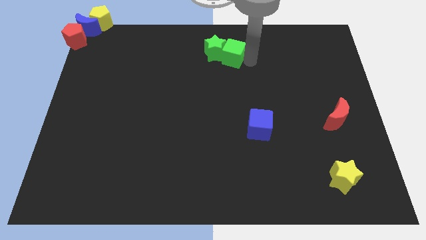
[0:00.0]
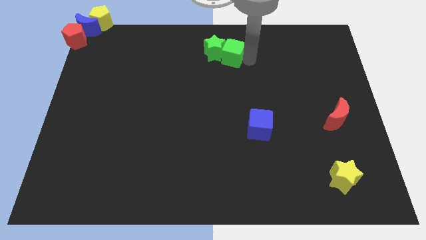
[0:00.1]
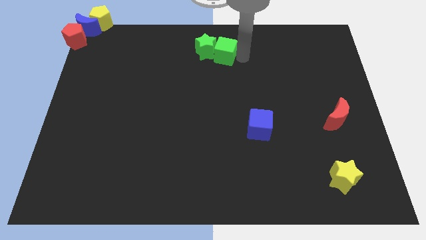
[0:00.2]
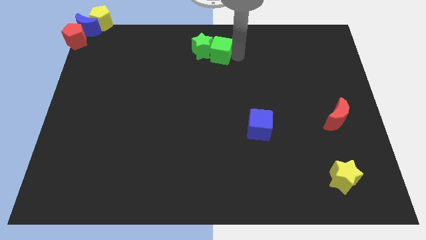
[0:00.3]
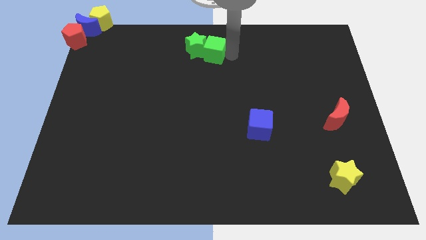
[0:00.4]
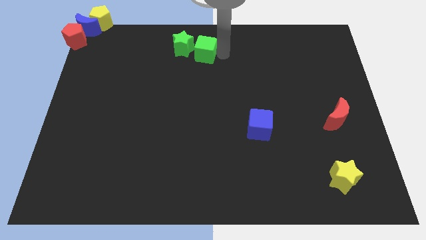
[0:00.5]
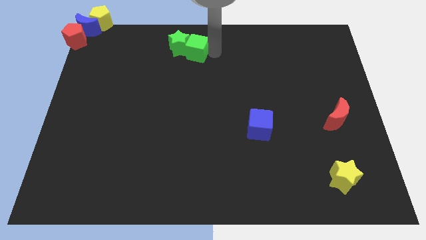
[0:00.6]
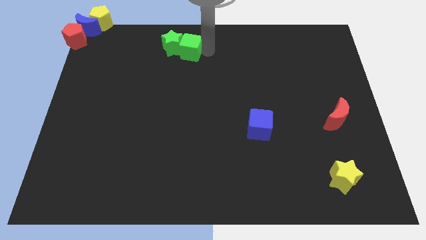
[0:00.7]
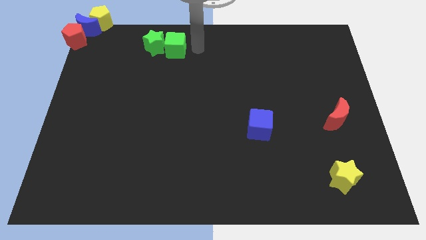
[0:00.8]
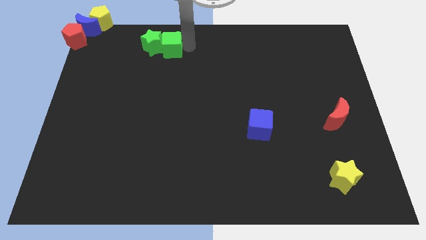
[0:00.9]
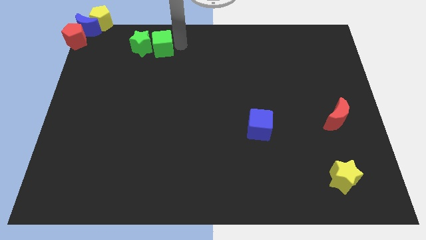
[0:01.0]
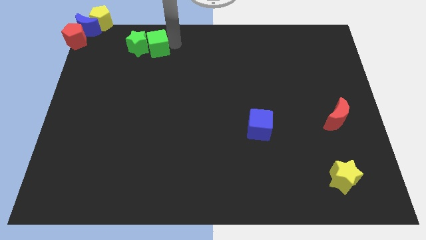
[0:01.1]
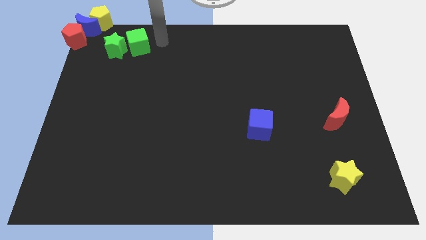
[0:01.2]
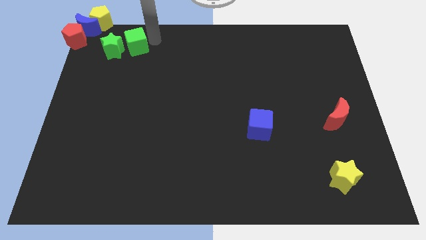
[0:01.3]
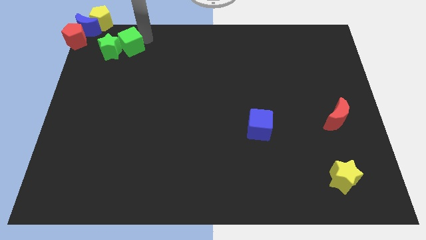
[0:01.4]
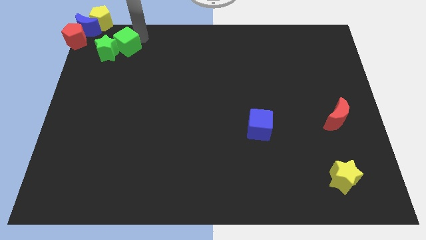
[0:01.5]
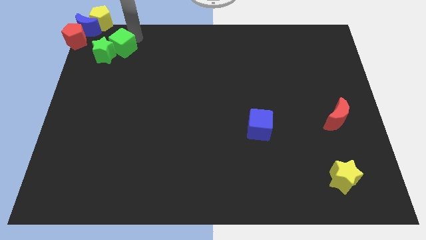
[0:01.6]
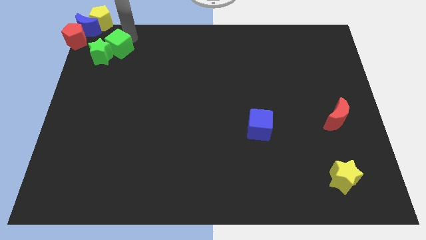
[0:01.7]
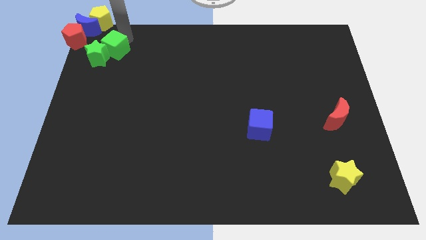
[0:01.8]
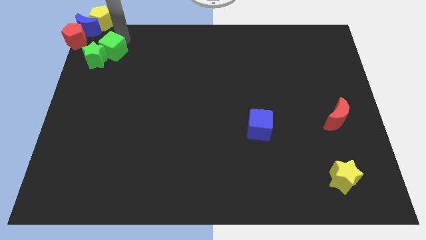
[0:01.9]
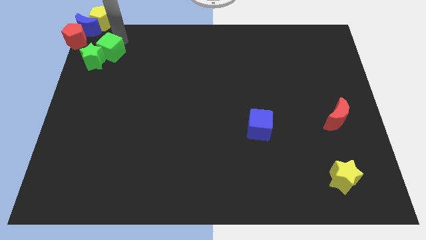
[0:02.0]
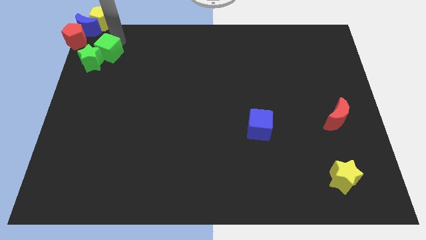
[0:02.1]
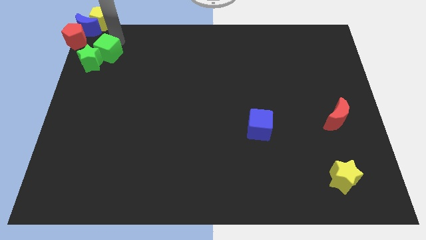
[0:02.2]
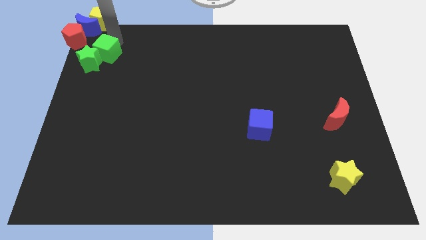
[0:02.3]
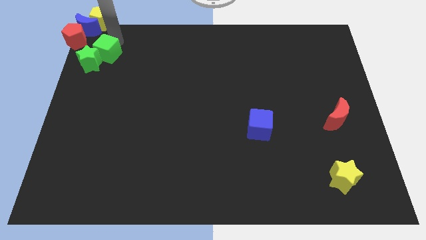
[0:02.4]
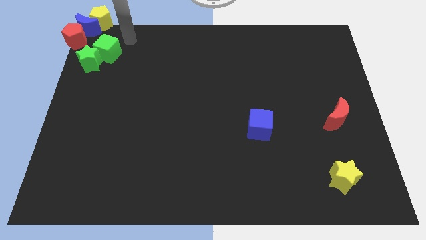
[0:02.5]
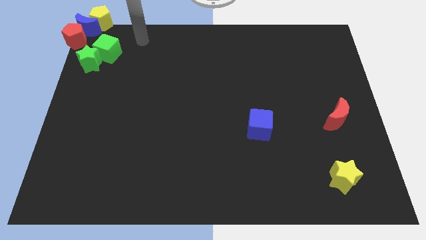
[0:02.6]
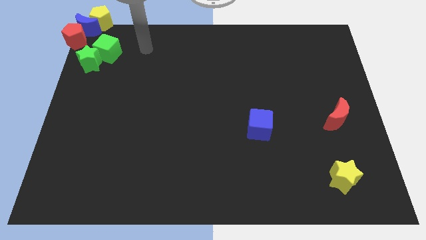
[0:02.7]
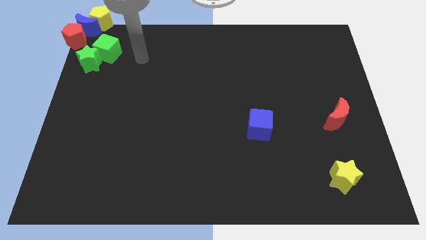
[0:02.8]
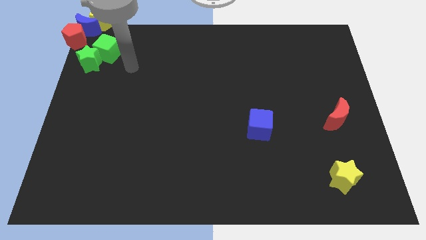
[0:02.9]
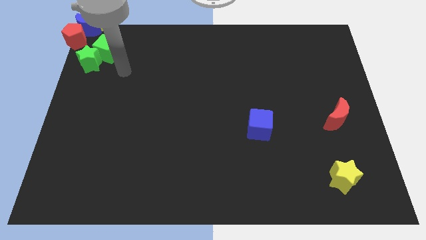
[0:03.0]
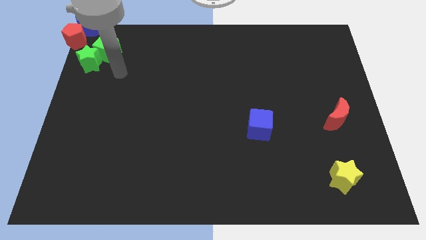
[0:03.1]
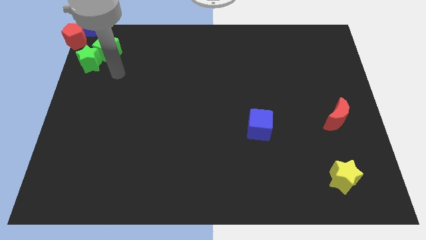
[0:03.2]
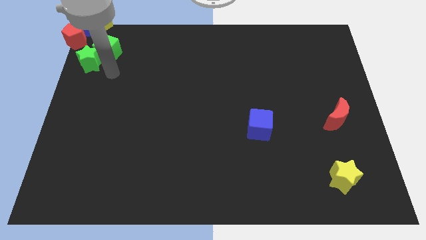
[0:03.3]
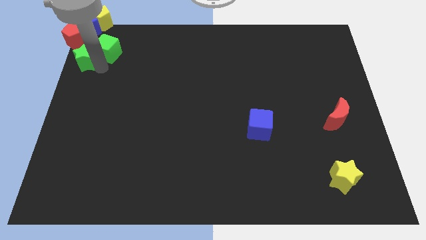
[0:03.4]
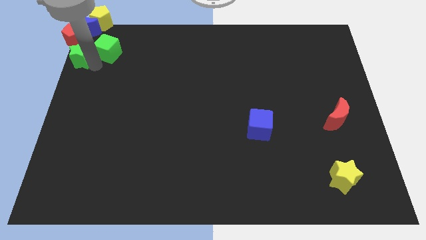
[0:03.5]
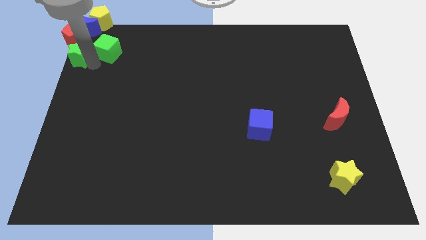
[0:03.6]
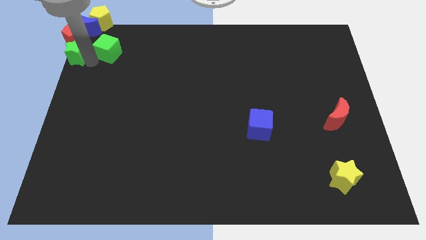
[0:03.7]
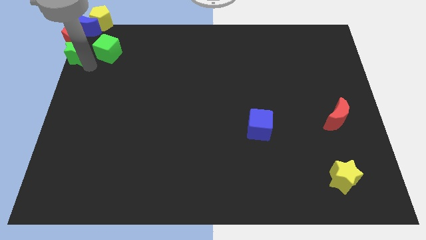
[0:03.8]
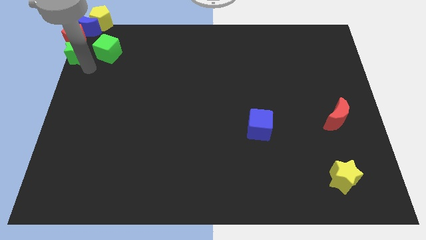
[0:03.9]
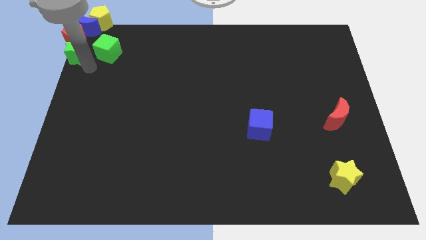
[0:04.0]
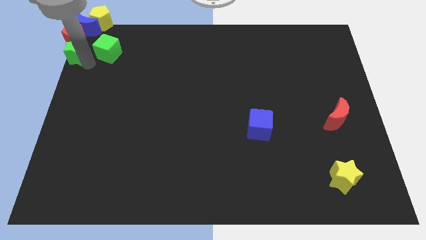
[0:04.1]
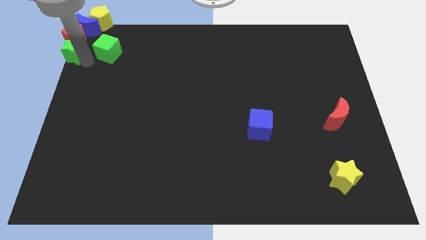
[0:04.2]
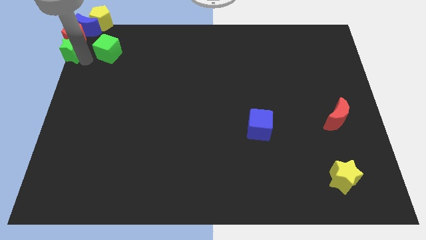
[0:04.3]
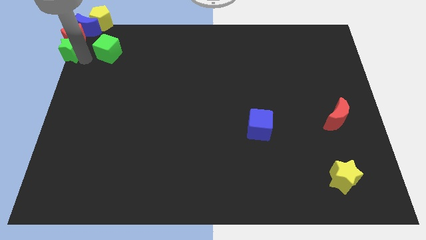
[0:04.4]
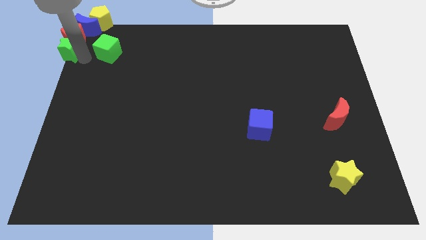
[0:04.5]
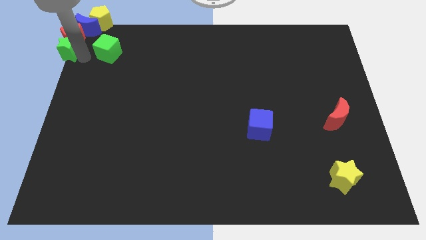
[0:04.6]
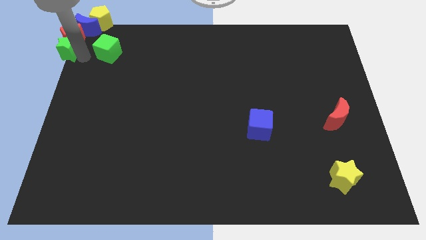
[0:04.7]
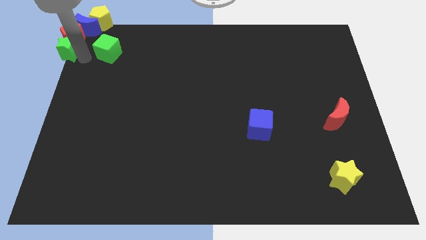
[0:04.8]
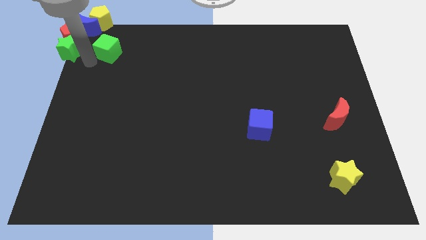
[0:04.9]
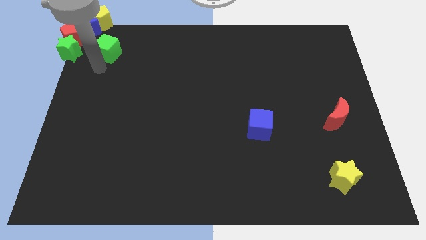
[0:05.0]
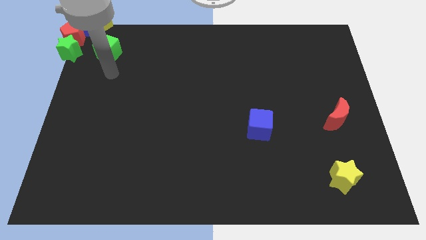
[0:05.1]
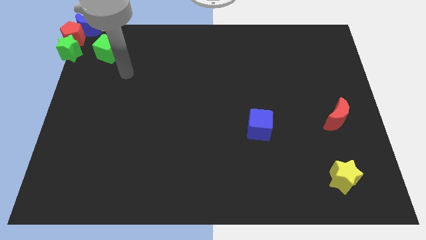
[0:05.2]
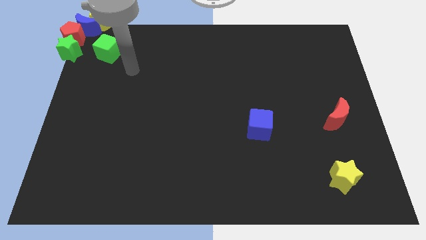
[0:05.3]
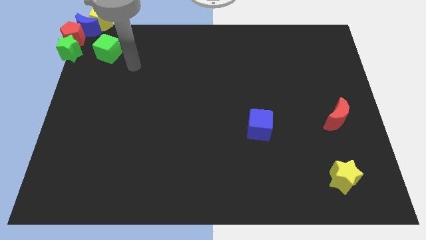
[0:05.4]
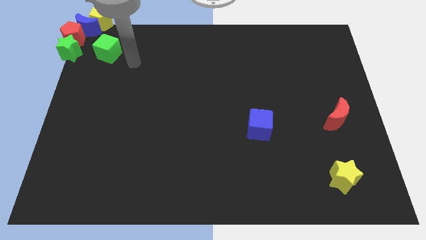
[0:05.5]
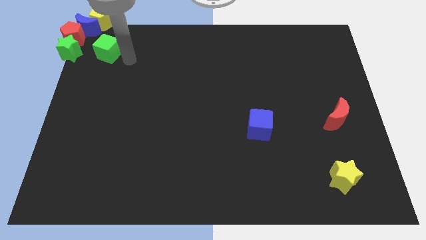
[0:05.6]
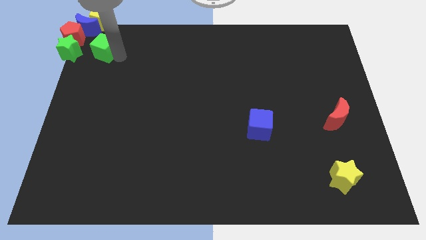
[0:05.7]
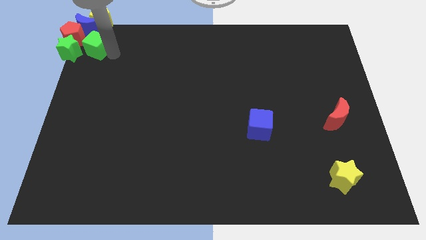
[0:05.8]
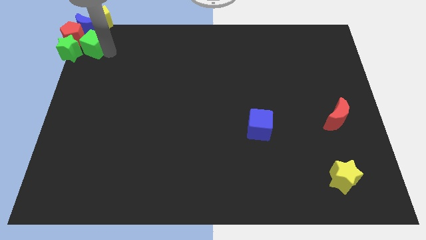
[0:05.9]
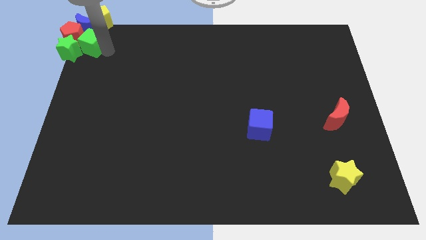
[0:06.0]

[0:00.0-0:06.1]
put the green blocks at the top left corner

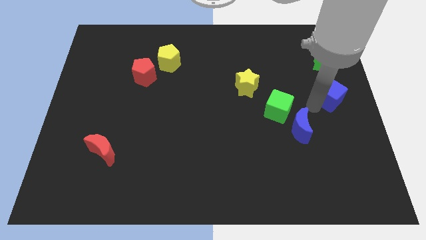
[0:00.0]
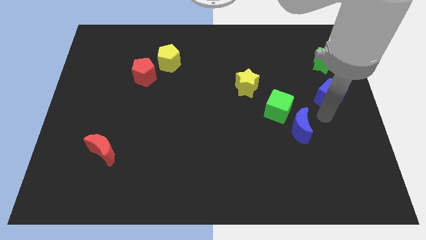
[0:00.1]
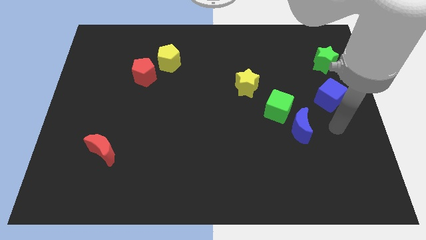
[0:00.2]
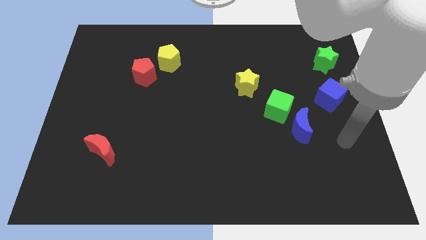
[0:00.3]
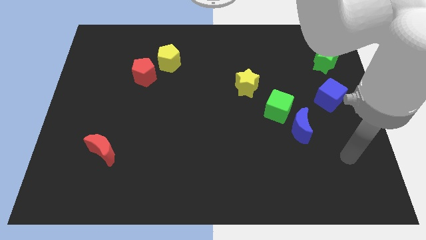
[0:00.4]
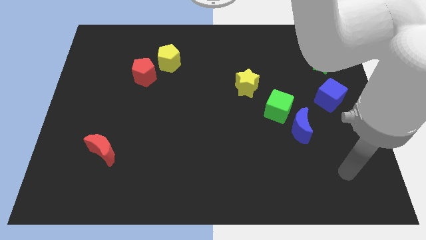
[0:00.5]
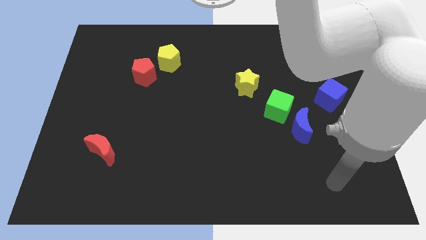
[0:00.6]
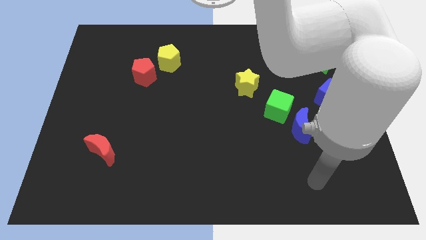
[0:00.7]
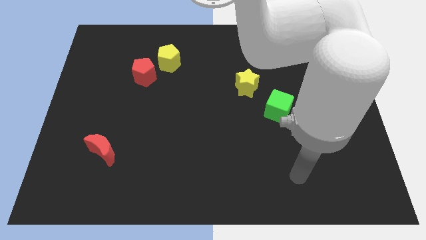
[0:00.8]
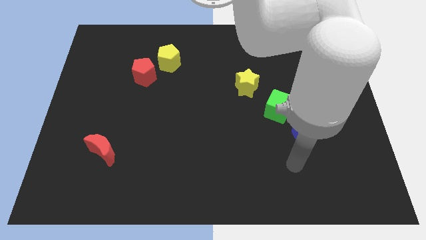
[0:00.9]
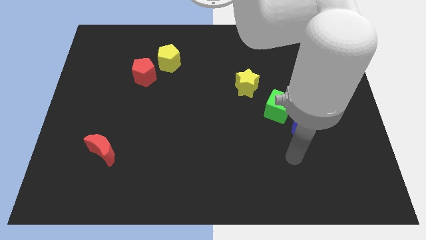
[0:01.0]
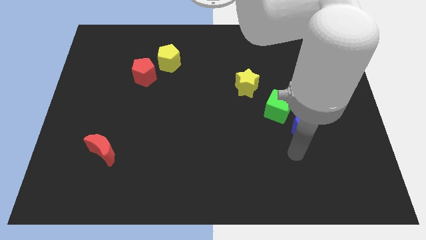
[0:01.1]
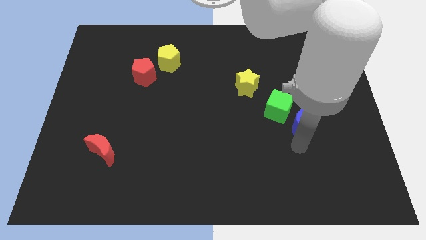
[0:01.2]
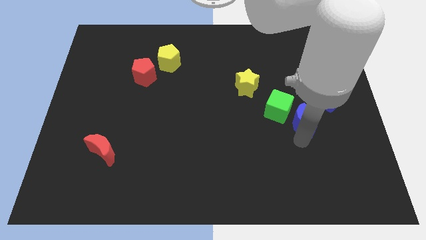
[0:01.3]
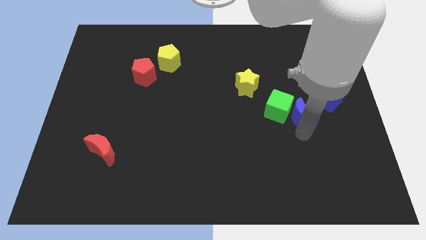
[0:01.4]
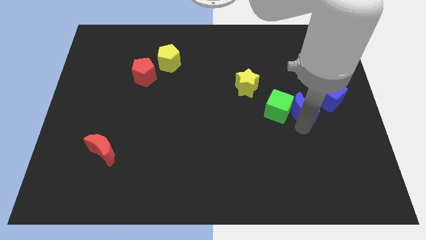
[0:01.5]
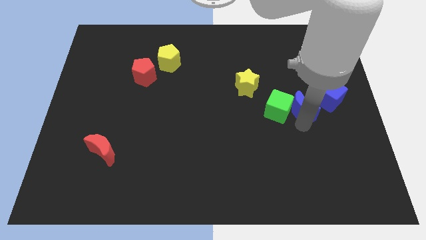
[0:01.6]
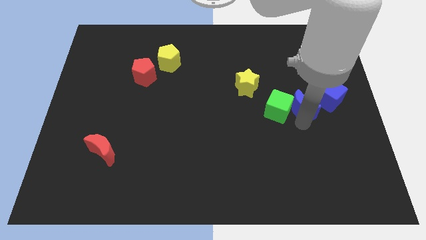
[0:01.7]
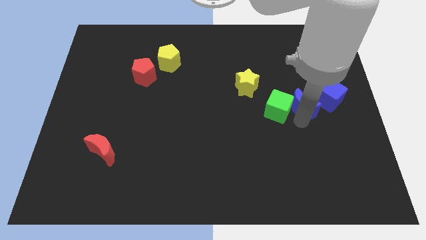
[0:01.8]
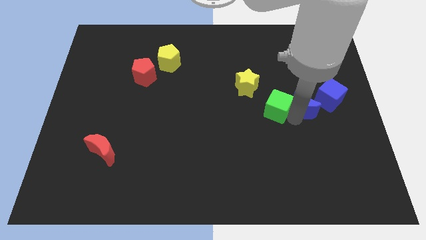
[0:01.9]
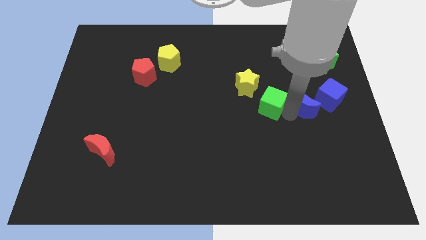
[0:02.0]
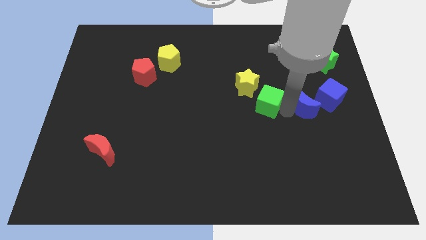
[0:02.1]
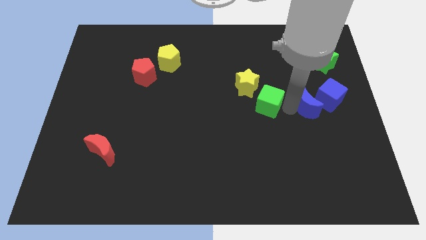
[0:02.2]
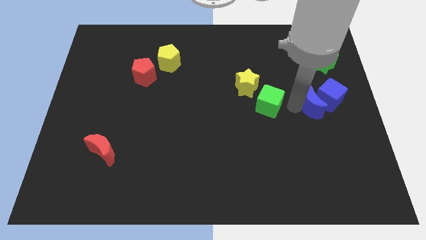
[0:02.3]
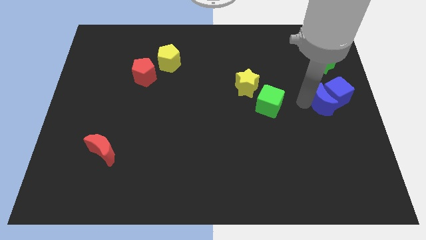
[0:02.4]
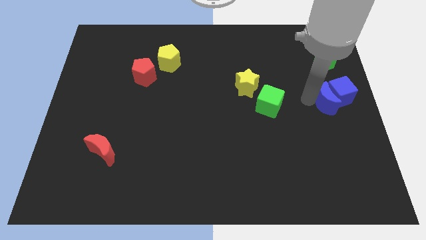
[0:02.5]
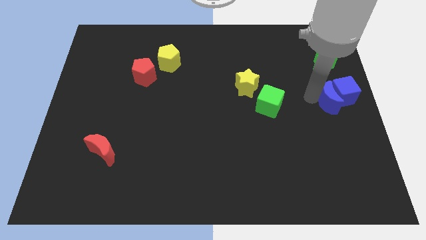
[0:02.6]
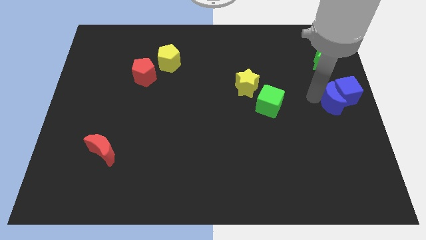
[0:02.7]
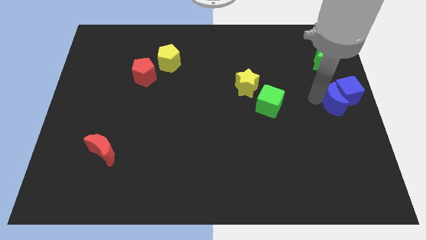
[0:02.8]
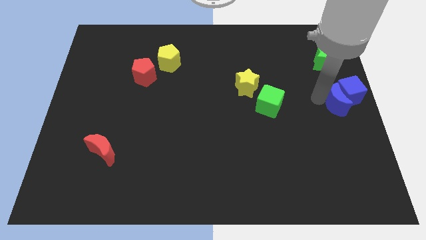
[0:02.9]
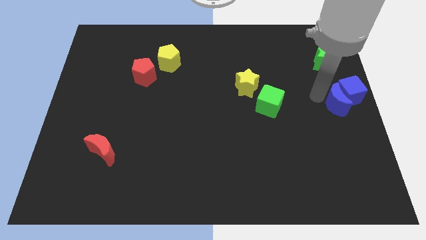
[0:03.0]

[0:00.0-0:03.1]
slide the blue blocks to the center right side of the table
